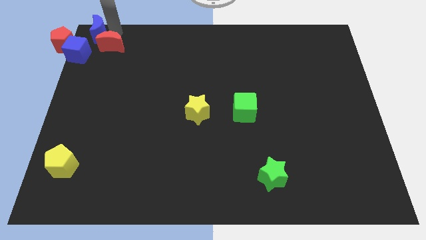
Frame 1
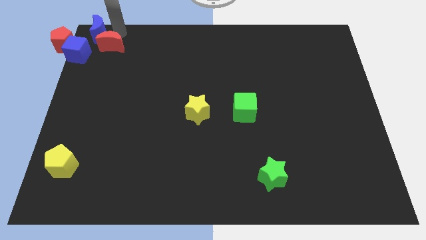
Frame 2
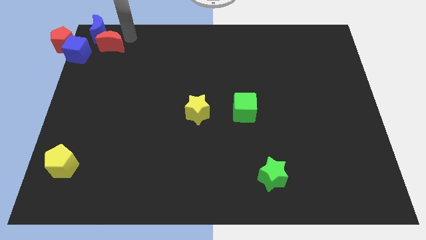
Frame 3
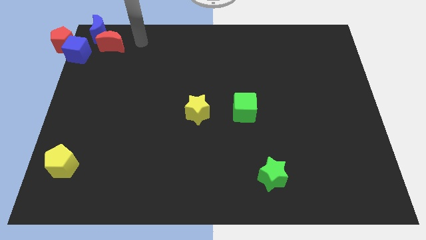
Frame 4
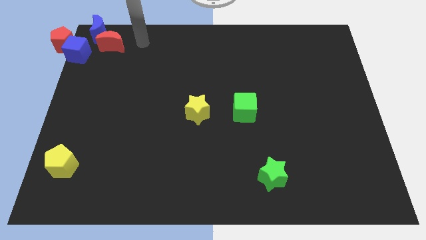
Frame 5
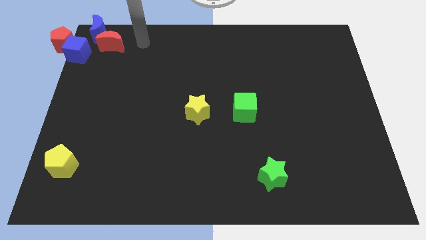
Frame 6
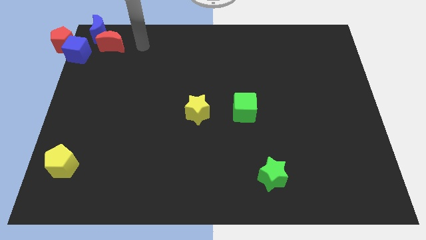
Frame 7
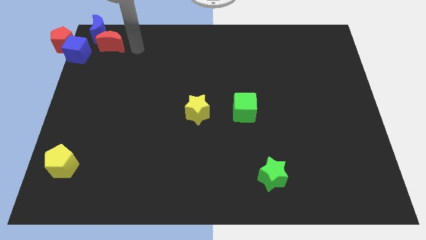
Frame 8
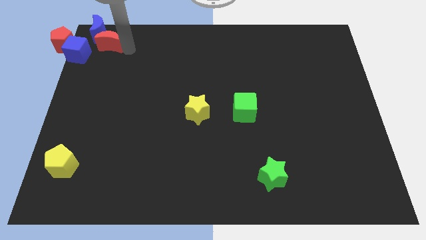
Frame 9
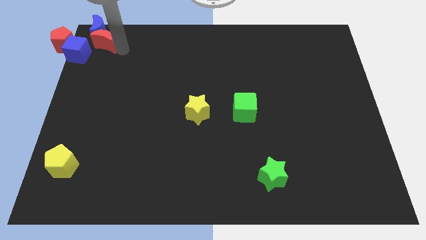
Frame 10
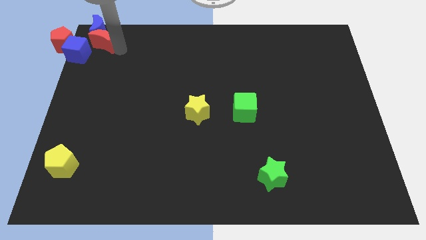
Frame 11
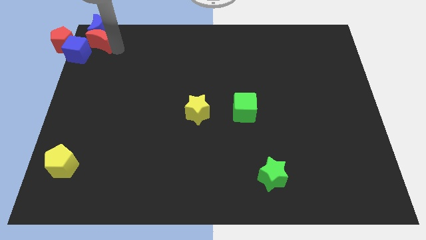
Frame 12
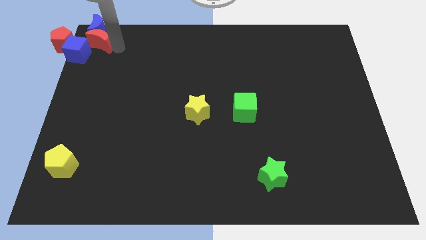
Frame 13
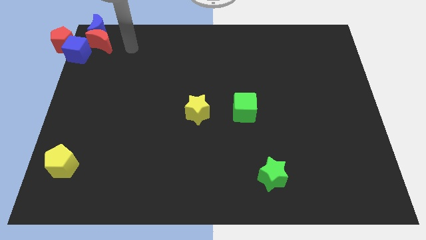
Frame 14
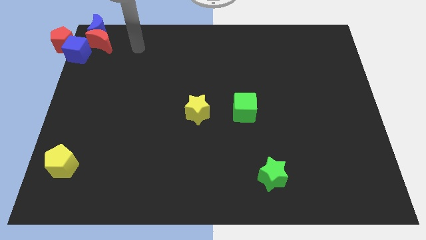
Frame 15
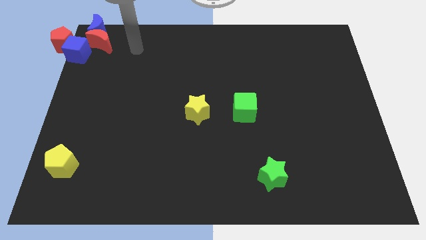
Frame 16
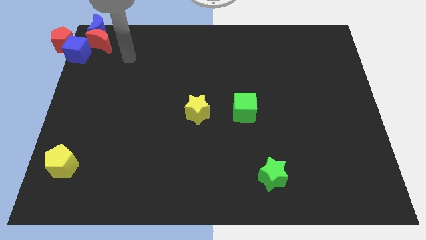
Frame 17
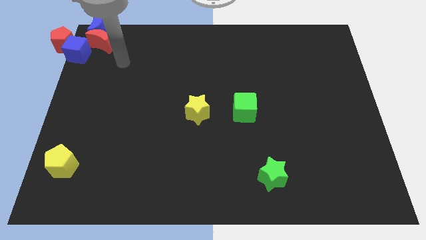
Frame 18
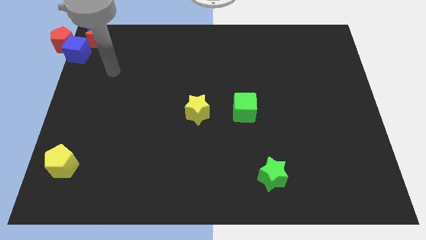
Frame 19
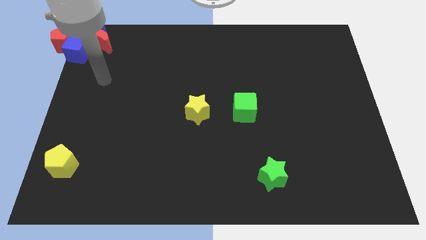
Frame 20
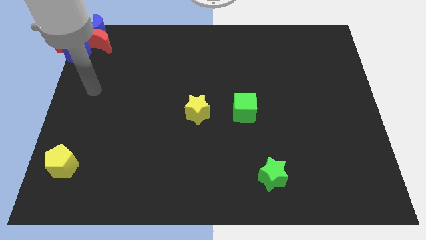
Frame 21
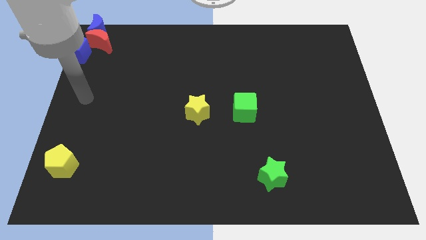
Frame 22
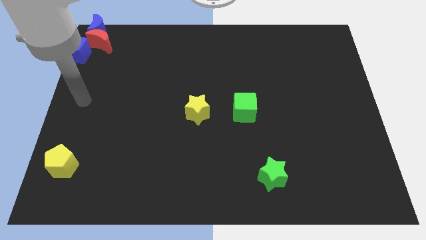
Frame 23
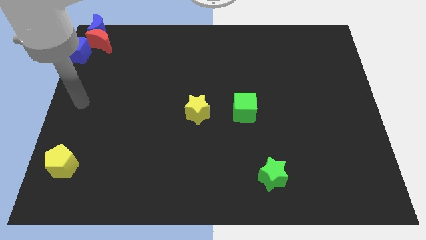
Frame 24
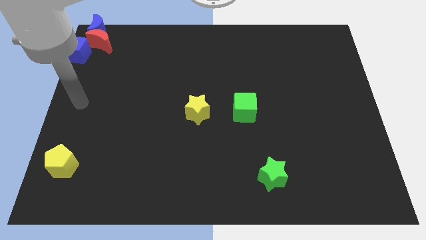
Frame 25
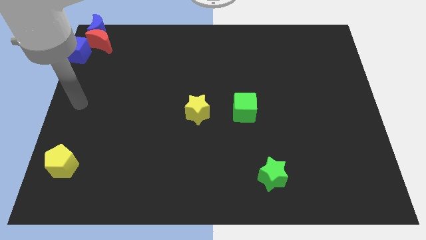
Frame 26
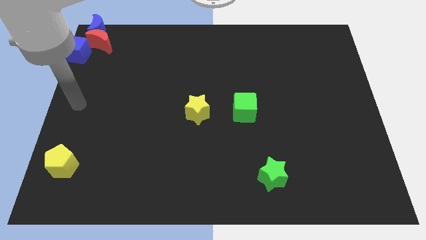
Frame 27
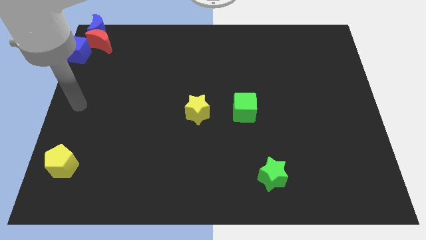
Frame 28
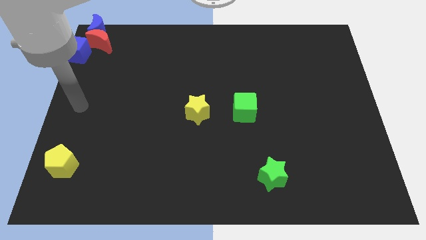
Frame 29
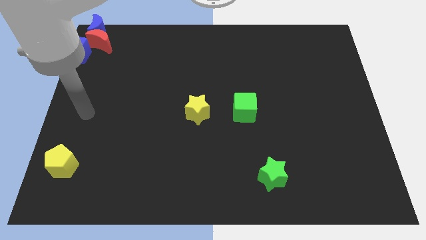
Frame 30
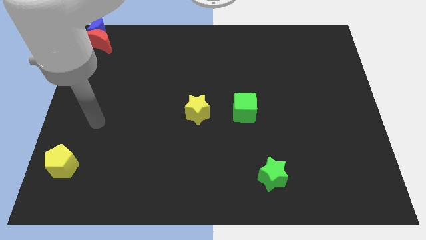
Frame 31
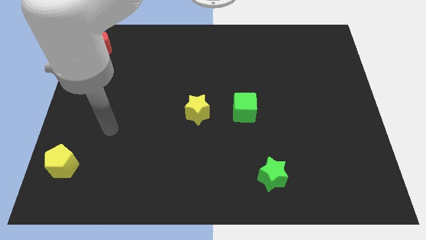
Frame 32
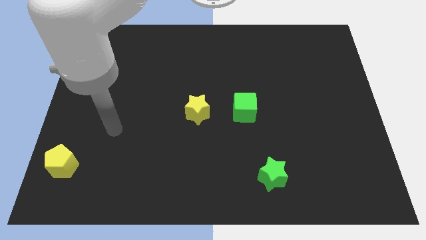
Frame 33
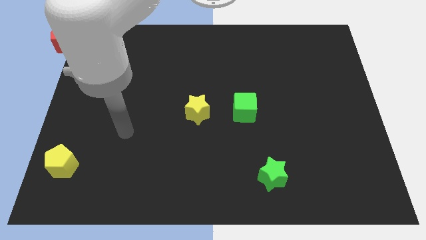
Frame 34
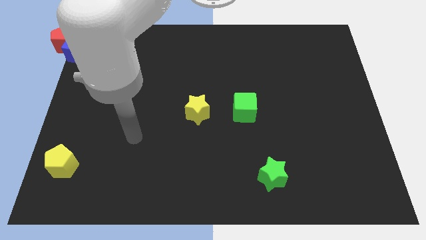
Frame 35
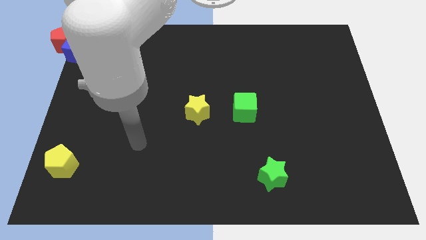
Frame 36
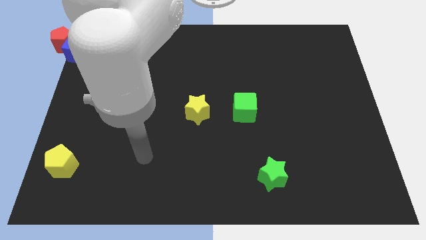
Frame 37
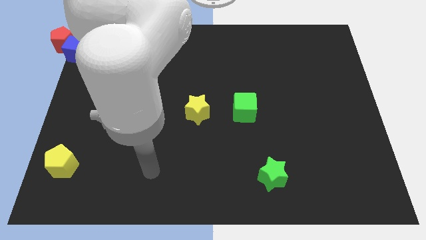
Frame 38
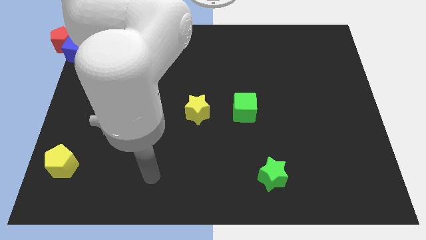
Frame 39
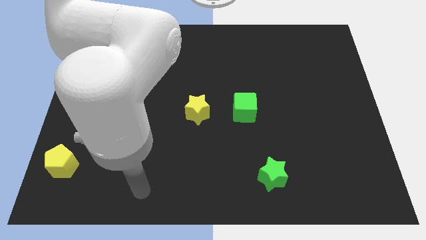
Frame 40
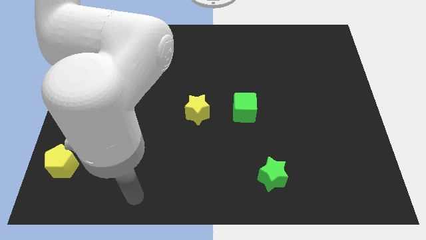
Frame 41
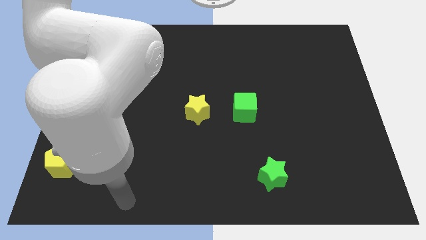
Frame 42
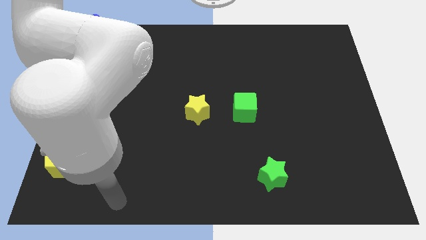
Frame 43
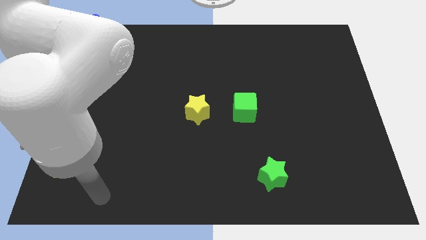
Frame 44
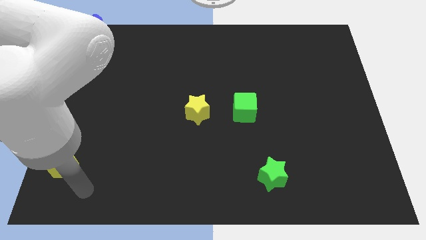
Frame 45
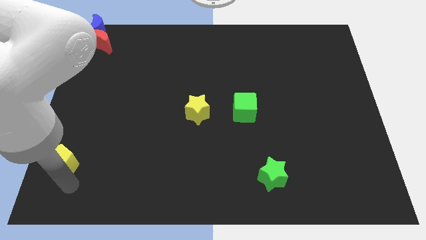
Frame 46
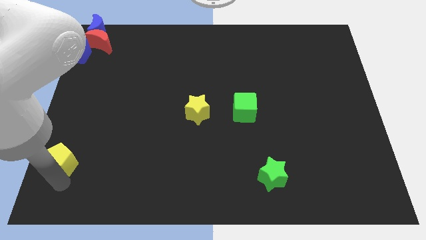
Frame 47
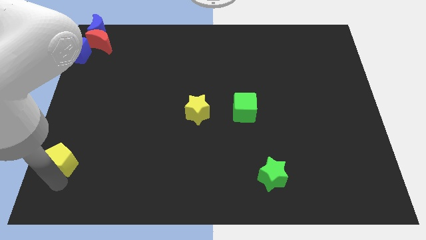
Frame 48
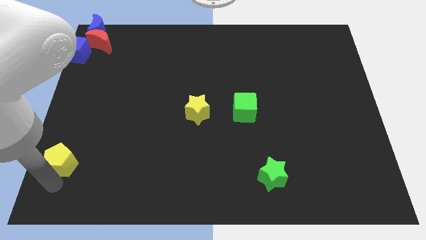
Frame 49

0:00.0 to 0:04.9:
drag your arm towards bottom of yellow pentagon

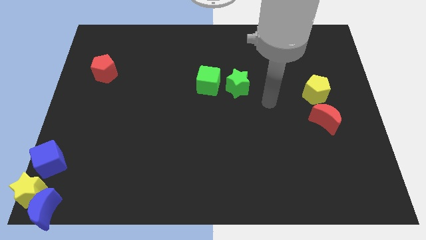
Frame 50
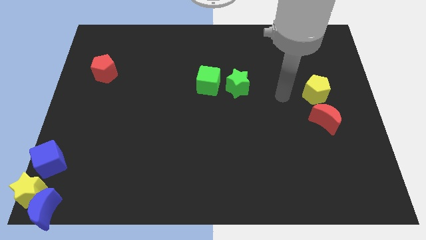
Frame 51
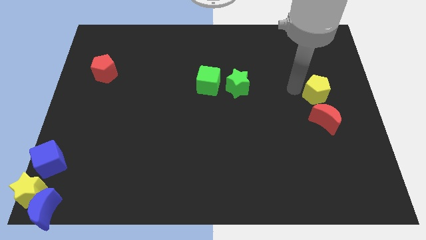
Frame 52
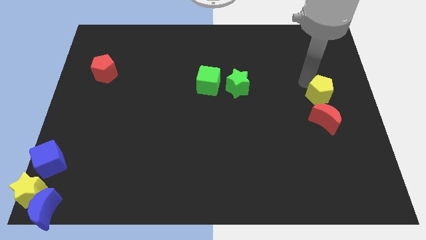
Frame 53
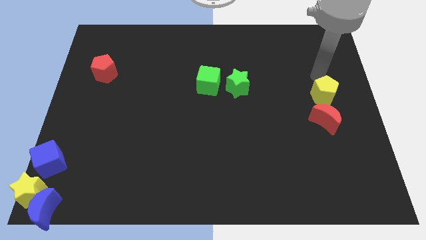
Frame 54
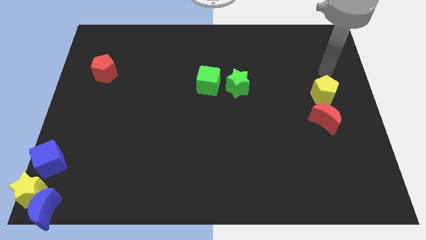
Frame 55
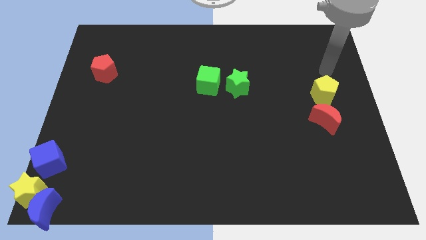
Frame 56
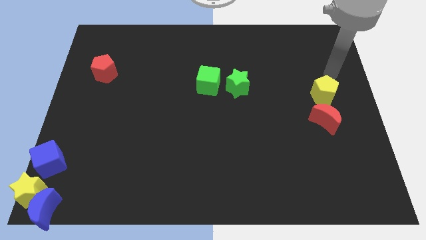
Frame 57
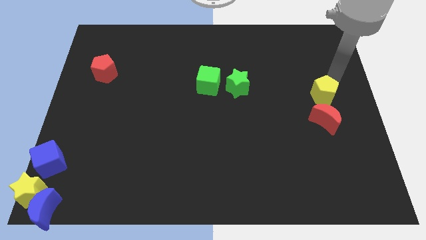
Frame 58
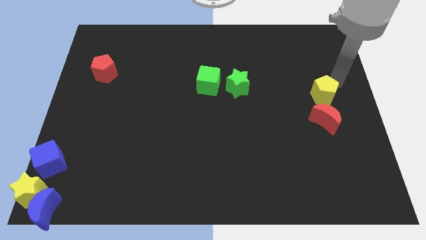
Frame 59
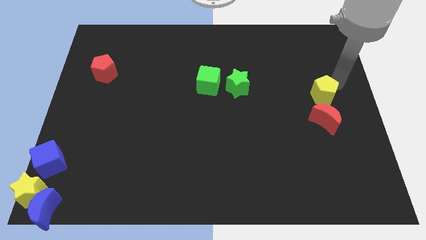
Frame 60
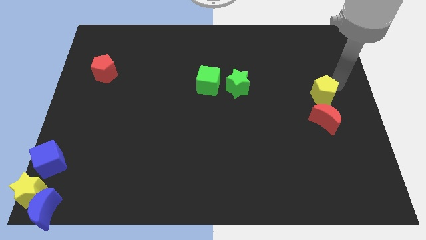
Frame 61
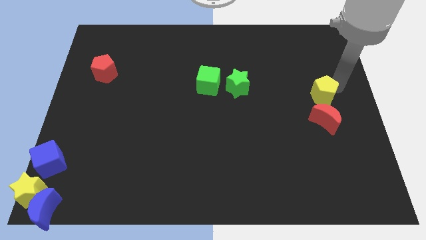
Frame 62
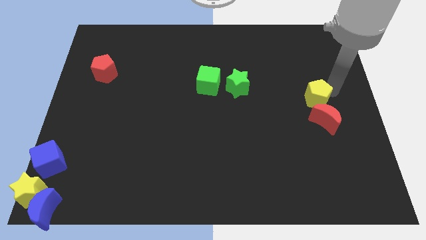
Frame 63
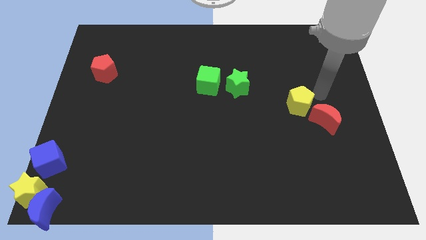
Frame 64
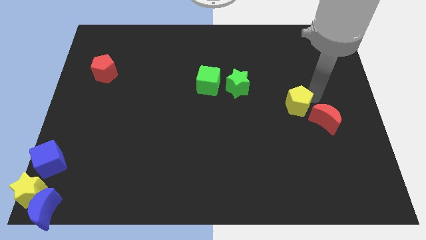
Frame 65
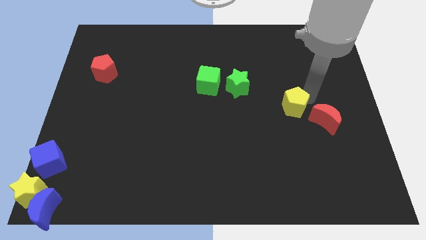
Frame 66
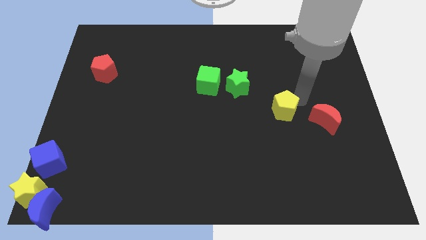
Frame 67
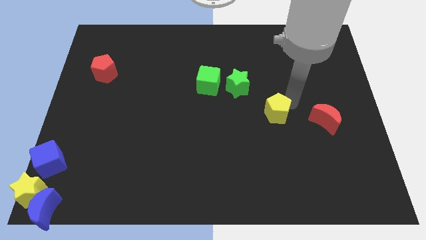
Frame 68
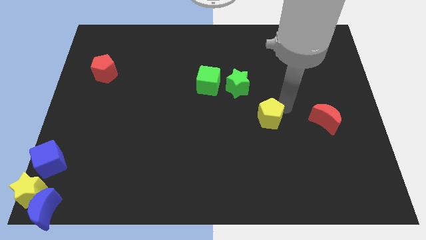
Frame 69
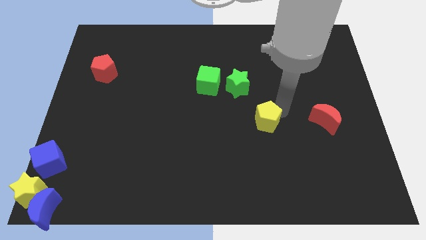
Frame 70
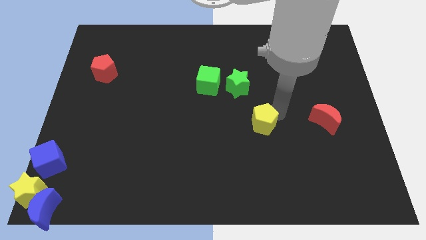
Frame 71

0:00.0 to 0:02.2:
move the yellow pentagon horizontally left to the red moon

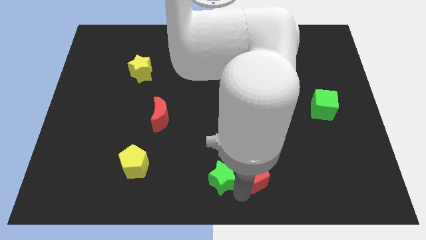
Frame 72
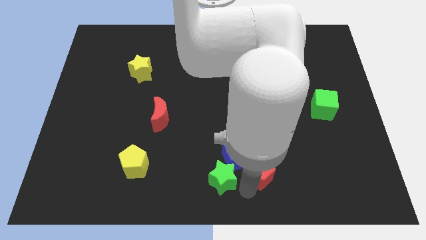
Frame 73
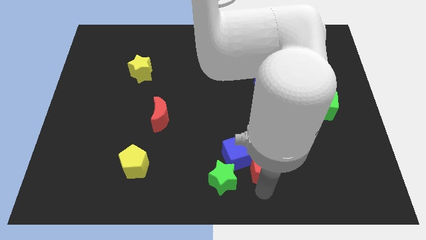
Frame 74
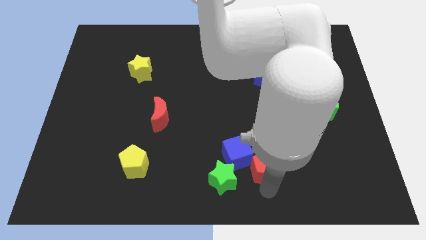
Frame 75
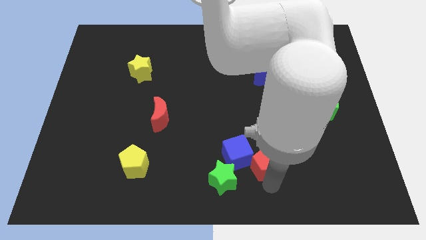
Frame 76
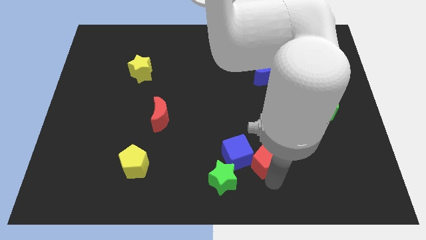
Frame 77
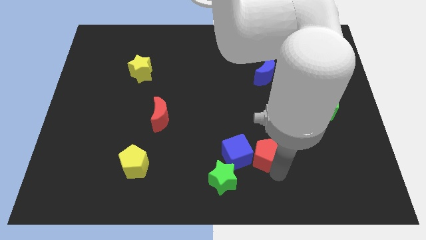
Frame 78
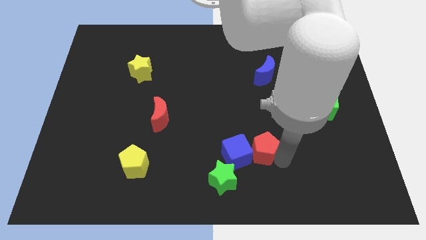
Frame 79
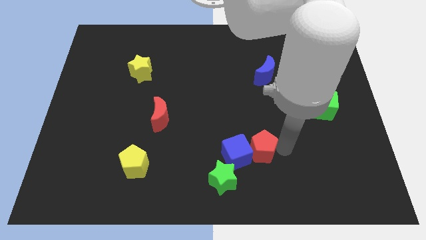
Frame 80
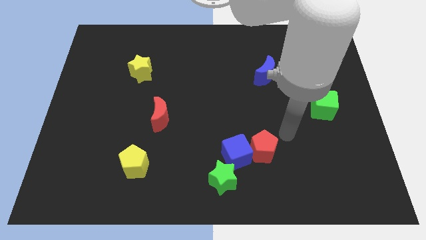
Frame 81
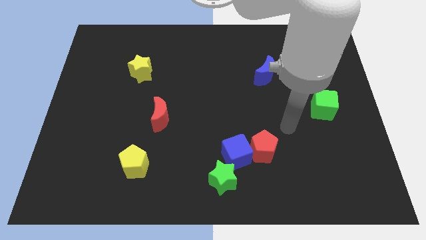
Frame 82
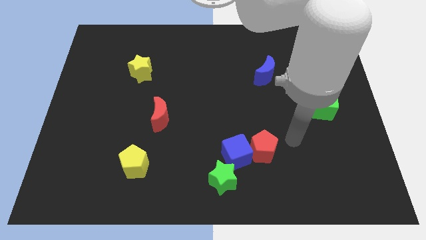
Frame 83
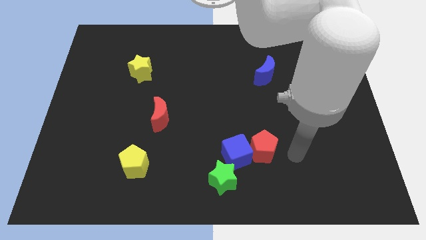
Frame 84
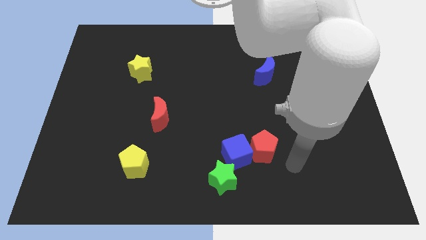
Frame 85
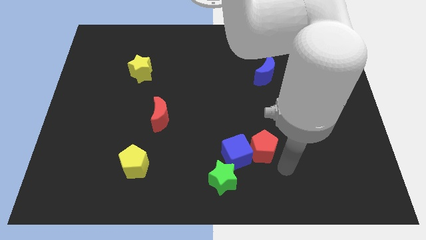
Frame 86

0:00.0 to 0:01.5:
move the red pentagon right to the blue cube

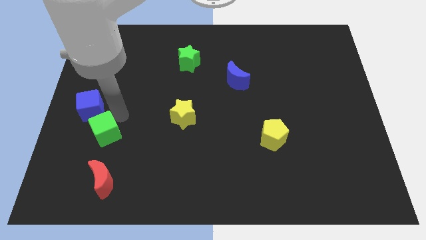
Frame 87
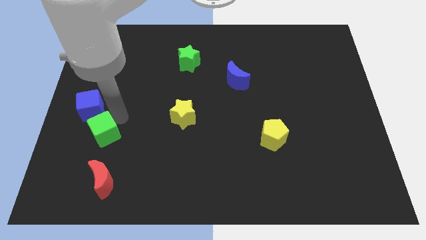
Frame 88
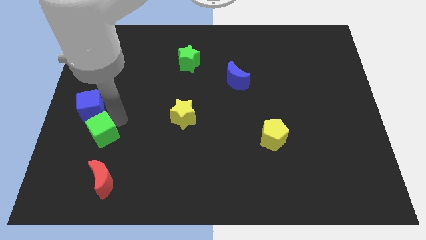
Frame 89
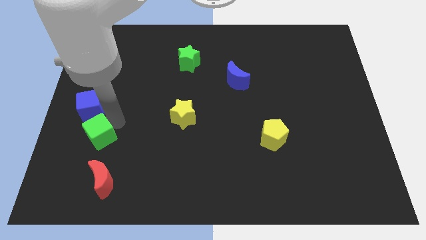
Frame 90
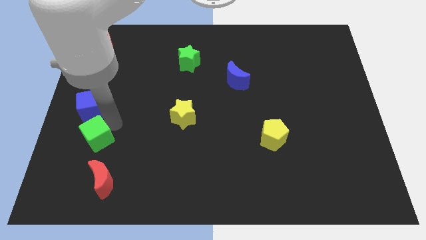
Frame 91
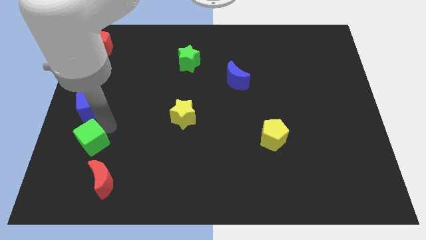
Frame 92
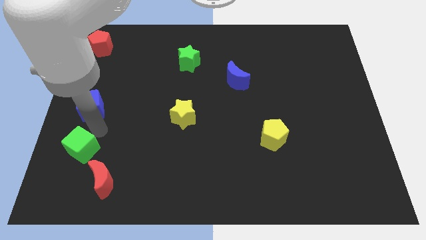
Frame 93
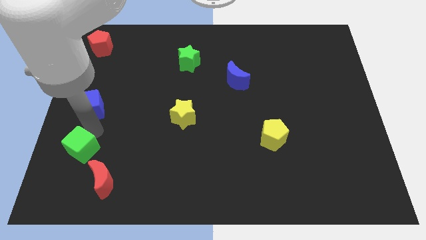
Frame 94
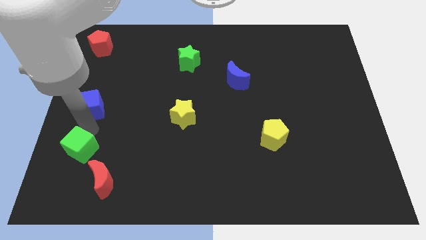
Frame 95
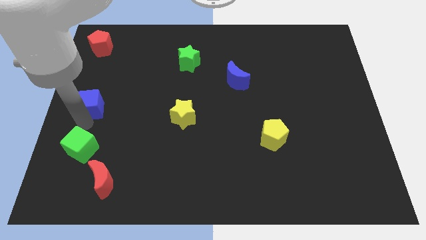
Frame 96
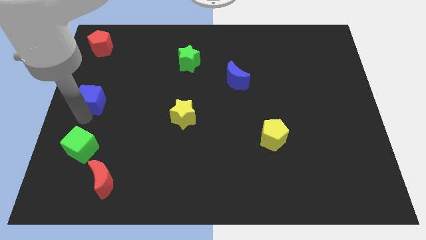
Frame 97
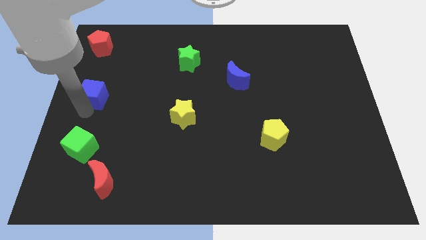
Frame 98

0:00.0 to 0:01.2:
separate the blue and green cubes
